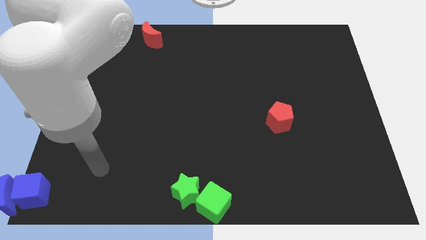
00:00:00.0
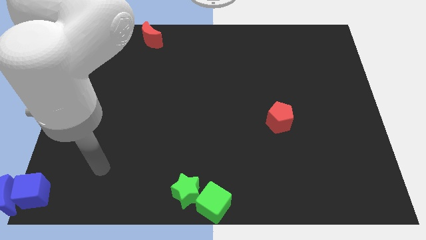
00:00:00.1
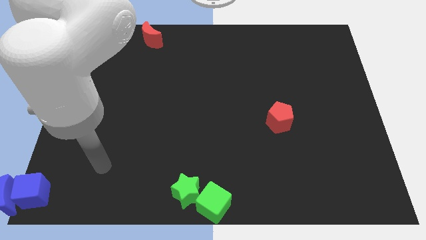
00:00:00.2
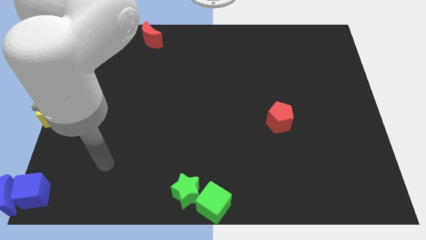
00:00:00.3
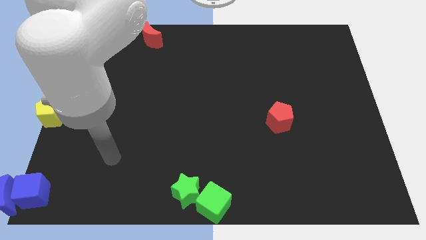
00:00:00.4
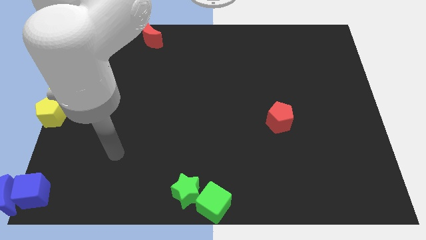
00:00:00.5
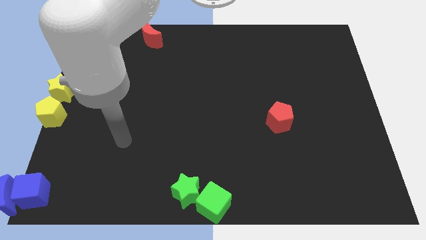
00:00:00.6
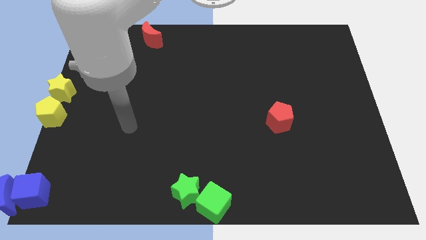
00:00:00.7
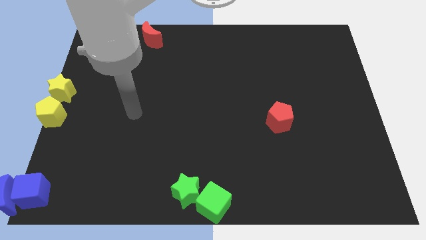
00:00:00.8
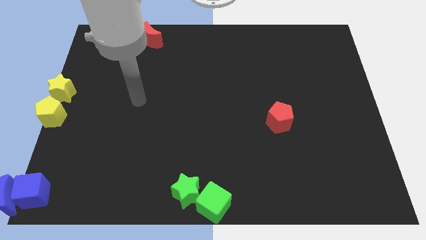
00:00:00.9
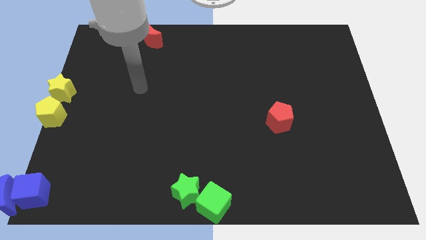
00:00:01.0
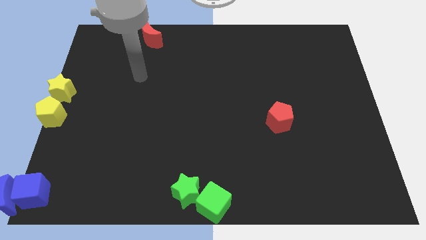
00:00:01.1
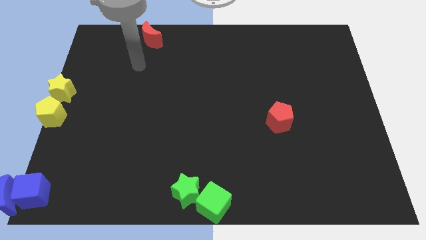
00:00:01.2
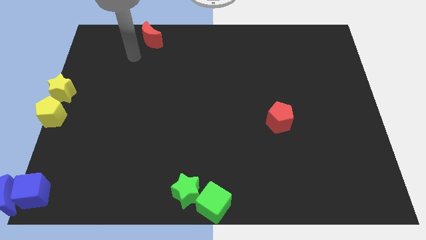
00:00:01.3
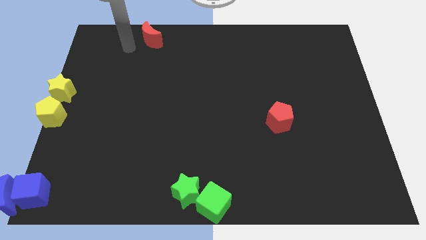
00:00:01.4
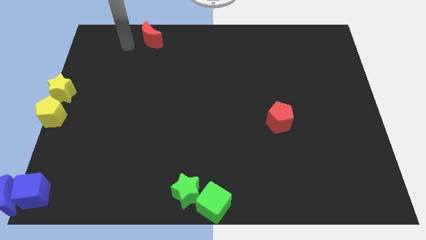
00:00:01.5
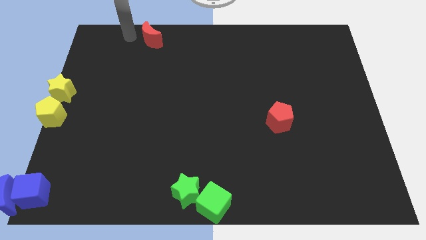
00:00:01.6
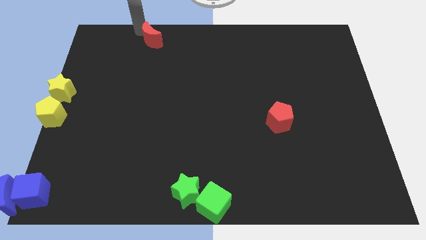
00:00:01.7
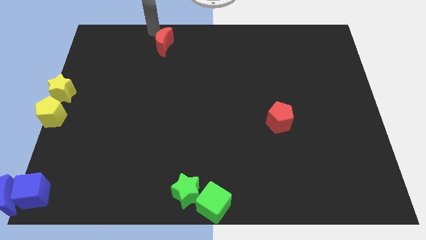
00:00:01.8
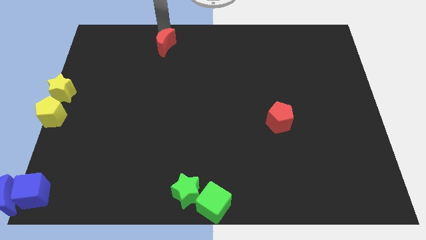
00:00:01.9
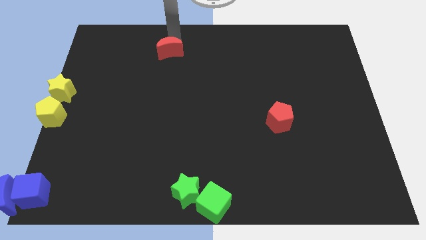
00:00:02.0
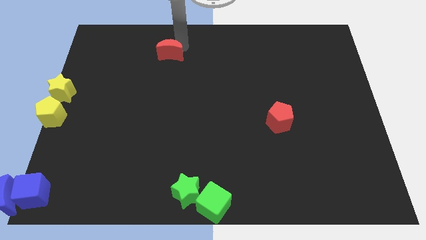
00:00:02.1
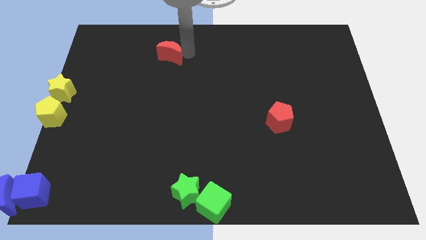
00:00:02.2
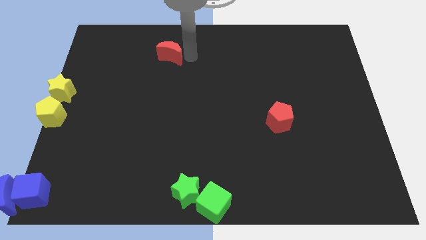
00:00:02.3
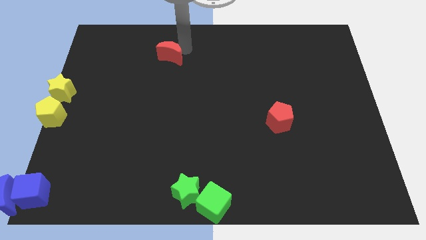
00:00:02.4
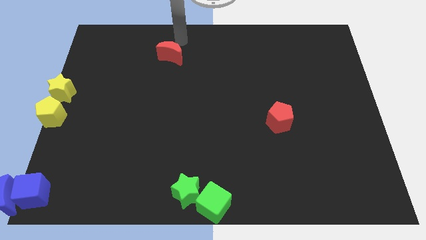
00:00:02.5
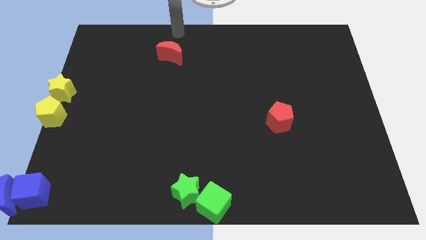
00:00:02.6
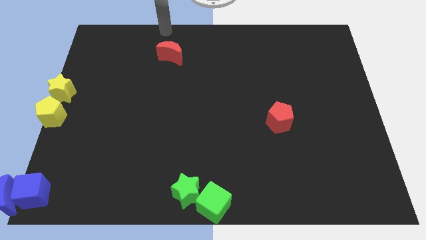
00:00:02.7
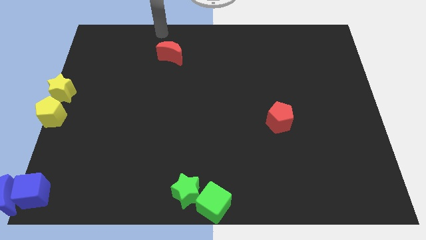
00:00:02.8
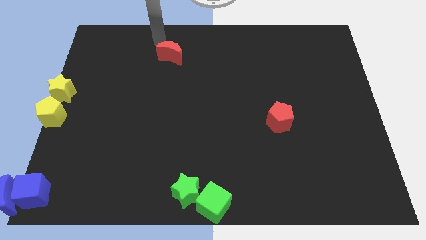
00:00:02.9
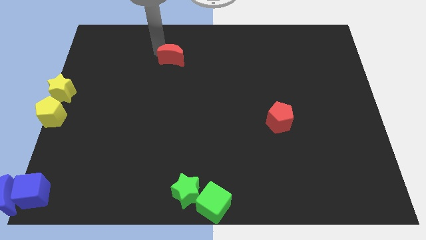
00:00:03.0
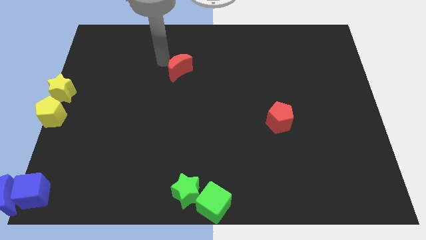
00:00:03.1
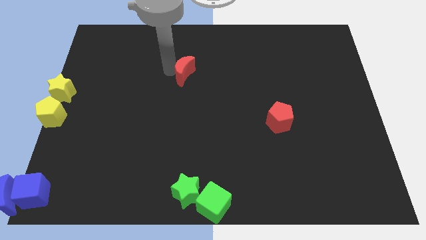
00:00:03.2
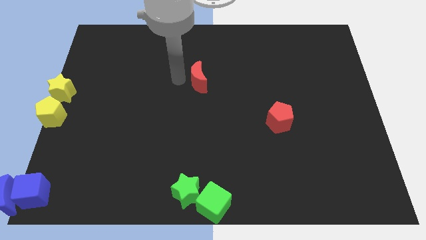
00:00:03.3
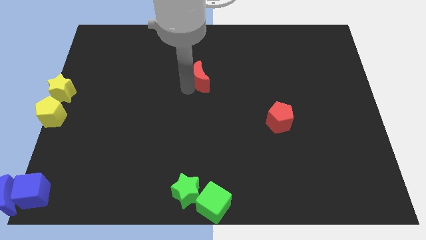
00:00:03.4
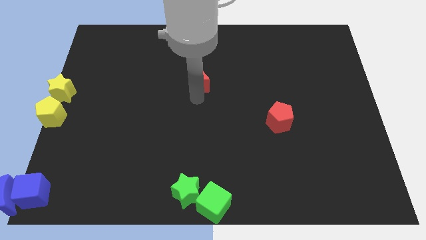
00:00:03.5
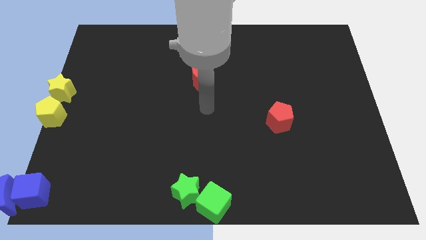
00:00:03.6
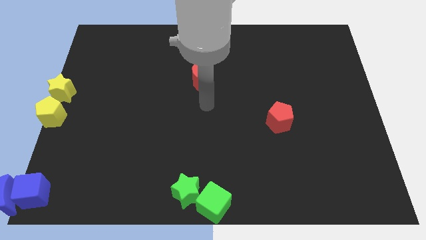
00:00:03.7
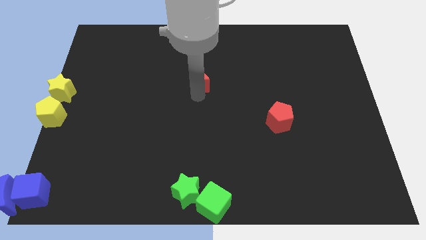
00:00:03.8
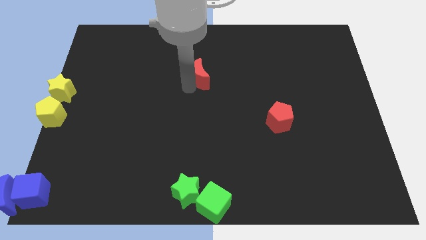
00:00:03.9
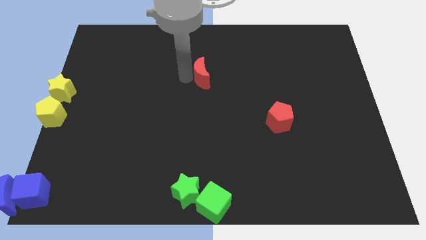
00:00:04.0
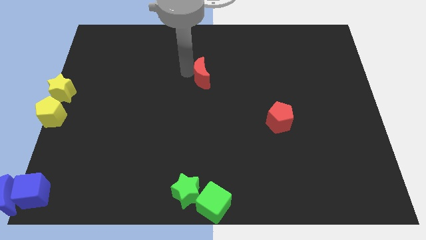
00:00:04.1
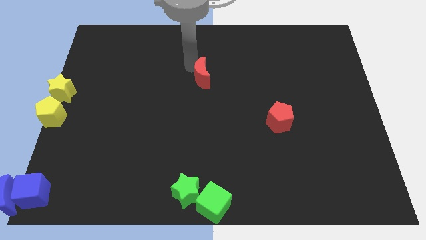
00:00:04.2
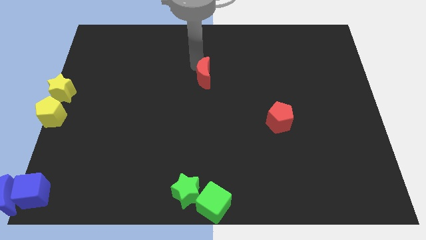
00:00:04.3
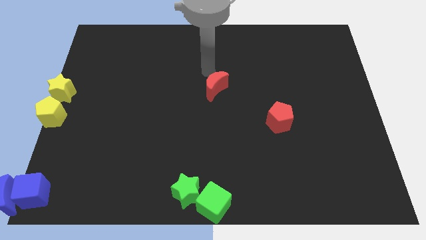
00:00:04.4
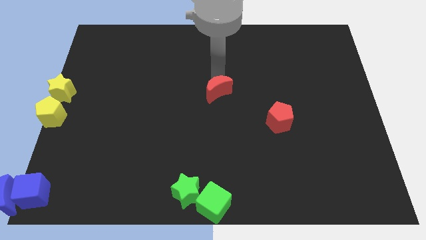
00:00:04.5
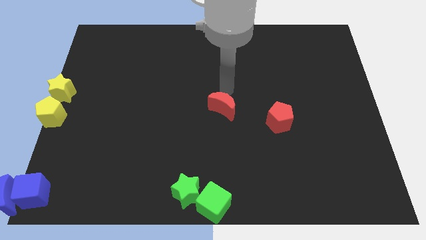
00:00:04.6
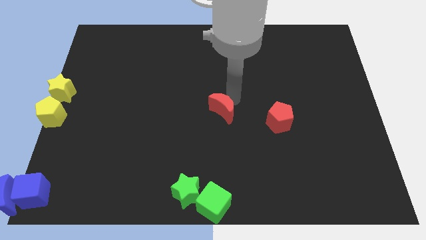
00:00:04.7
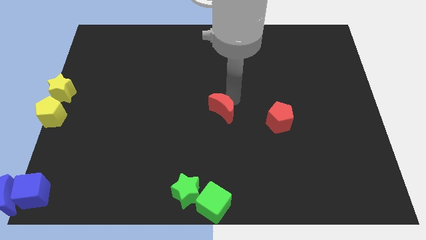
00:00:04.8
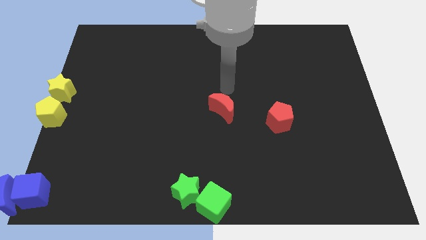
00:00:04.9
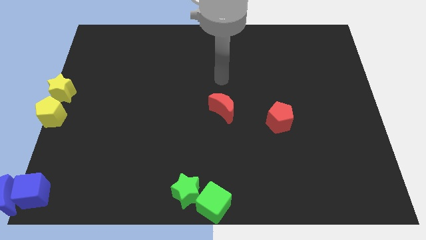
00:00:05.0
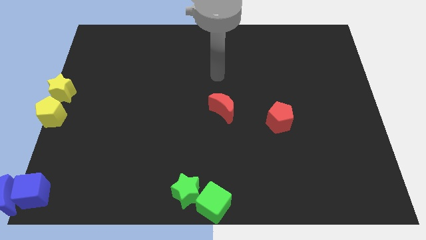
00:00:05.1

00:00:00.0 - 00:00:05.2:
push the red crescent parallel left to the red pentagon

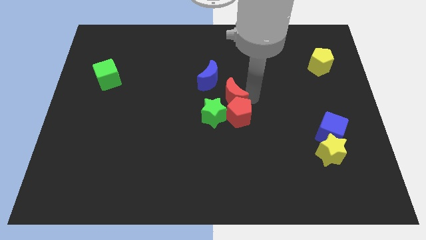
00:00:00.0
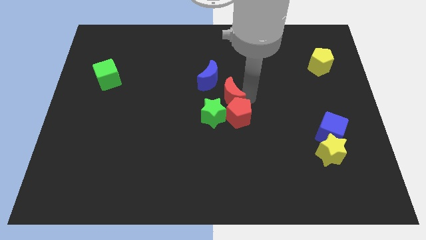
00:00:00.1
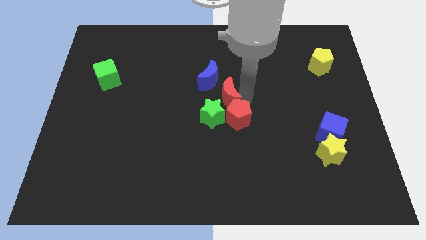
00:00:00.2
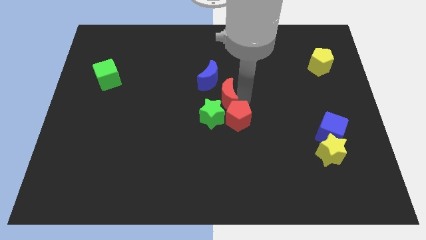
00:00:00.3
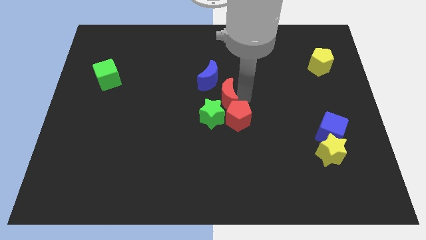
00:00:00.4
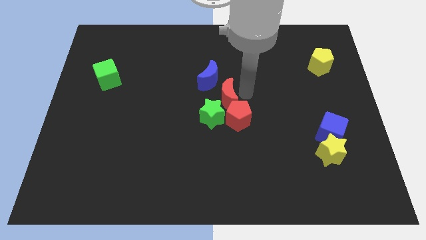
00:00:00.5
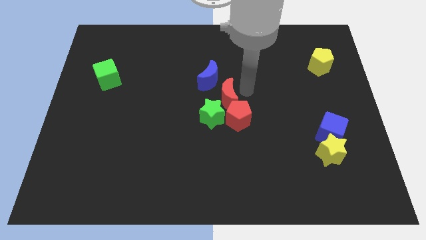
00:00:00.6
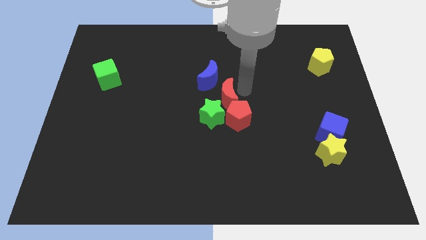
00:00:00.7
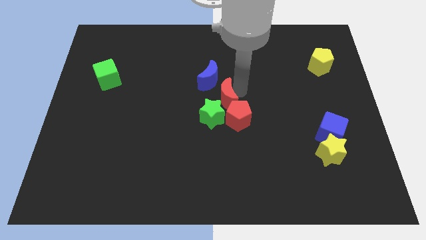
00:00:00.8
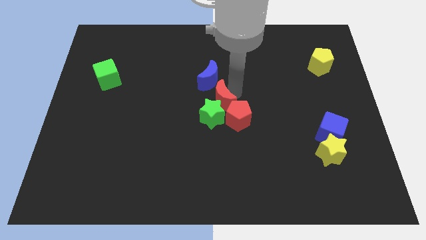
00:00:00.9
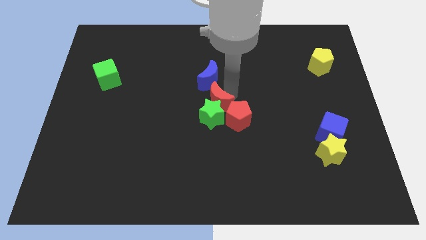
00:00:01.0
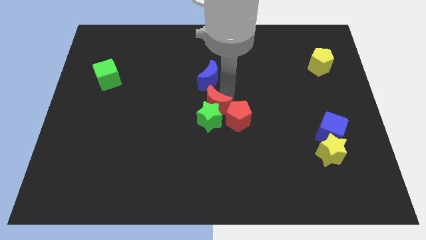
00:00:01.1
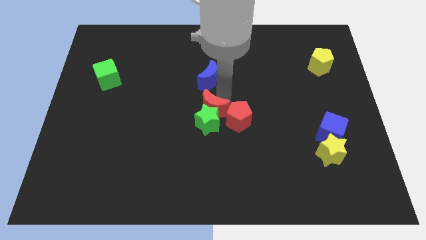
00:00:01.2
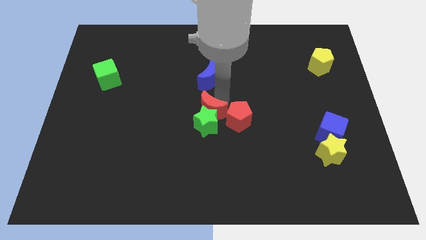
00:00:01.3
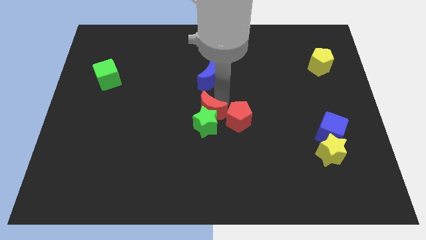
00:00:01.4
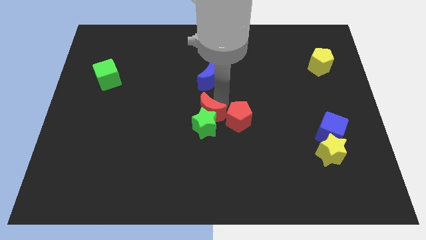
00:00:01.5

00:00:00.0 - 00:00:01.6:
push the red moon into the green star

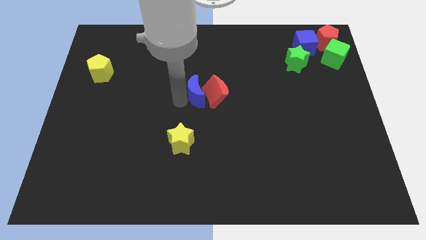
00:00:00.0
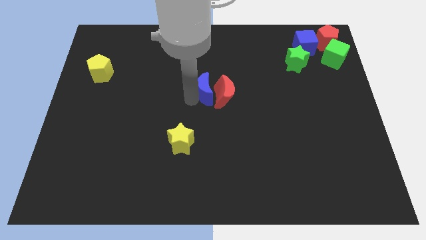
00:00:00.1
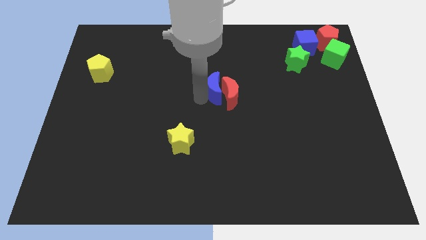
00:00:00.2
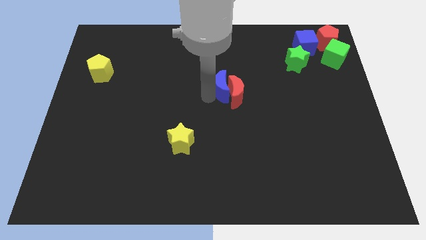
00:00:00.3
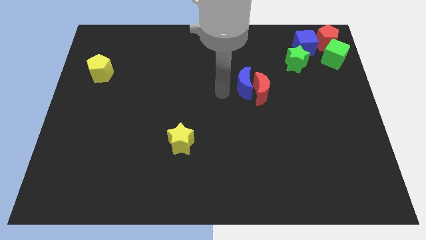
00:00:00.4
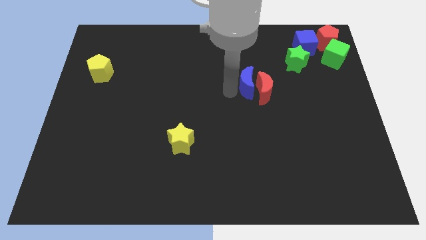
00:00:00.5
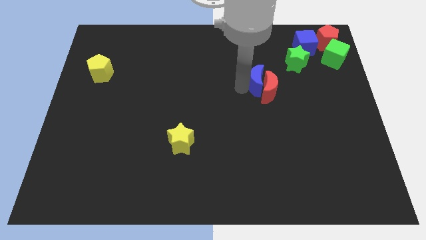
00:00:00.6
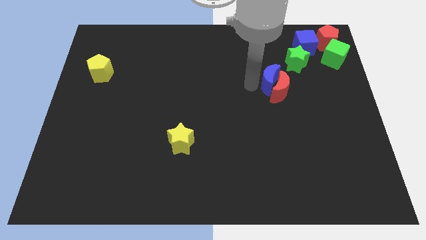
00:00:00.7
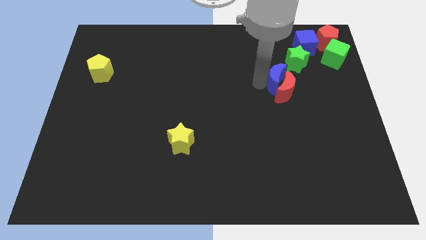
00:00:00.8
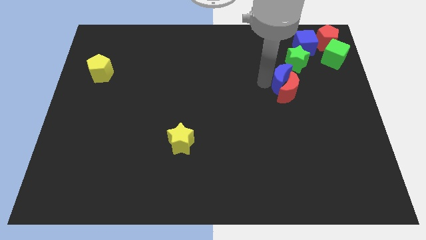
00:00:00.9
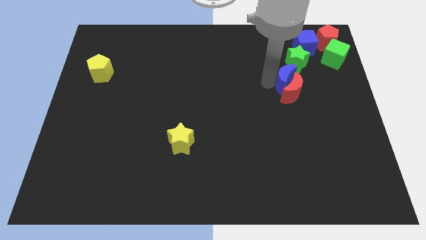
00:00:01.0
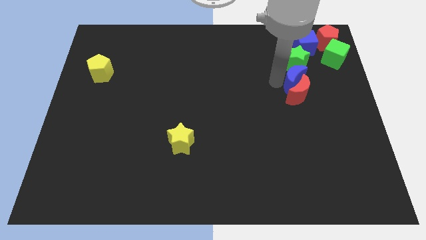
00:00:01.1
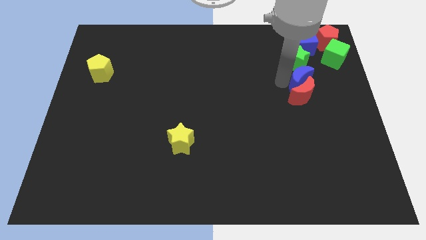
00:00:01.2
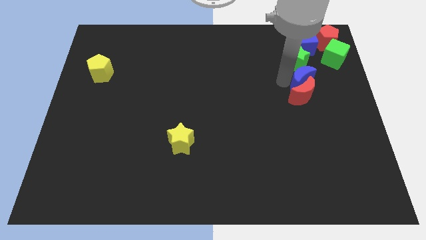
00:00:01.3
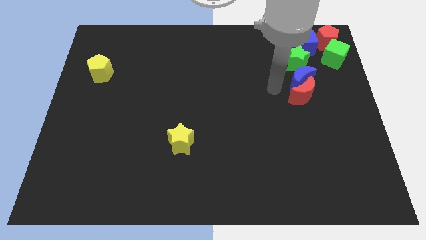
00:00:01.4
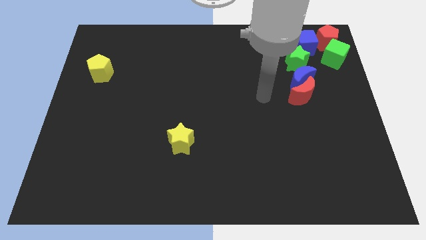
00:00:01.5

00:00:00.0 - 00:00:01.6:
place the blue moon to the bottom of green star

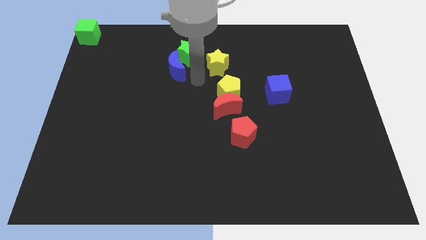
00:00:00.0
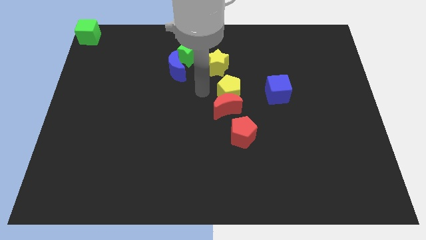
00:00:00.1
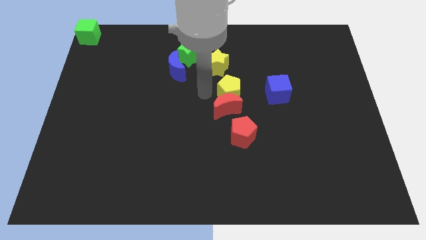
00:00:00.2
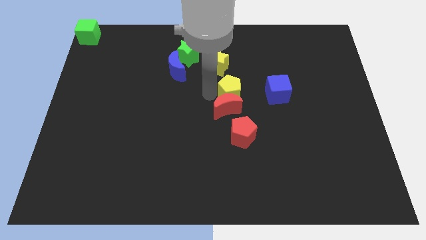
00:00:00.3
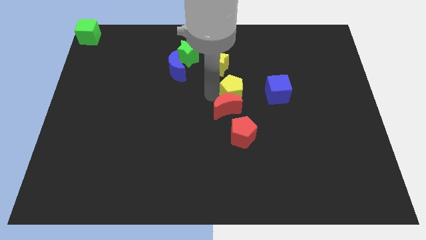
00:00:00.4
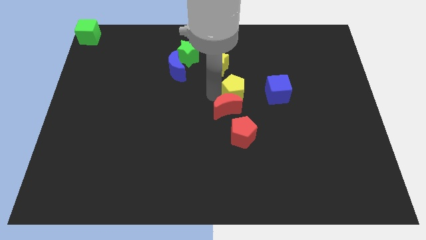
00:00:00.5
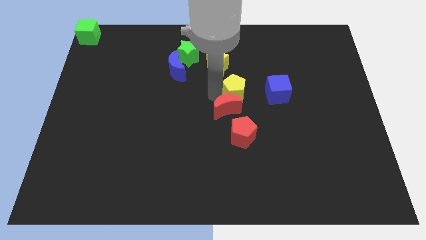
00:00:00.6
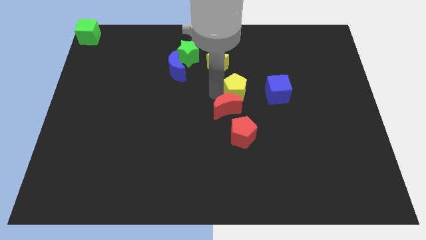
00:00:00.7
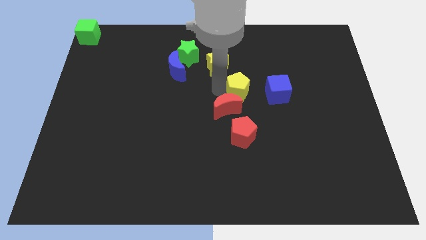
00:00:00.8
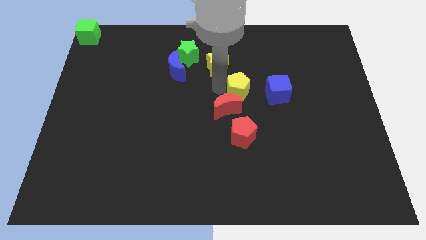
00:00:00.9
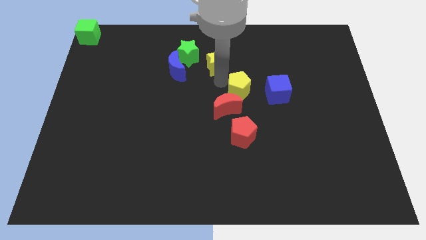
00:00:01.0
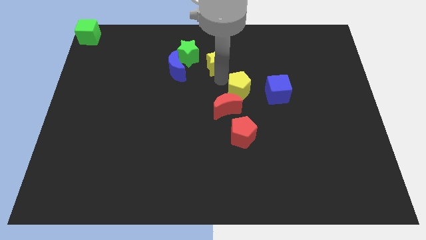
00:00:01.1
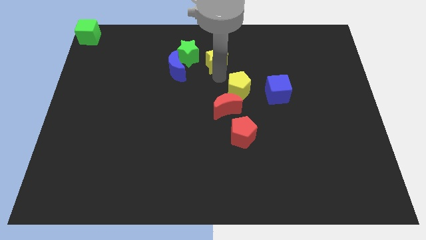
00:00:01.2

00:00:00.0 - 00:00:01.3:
touch left to the yellow pentagon
